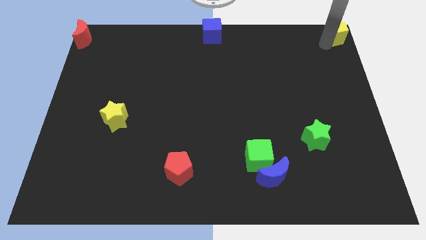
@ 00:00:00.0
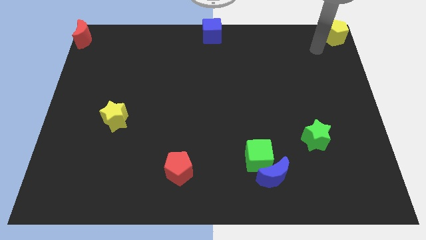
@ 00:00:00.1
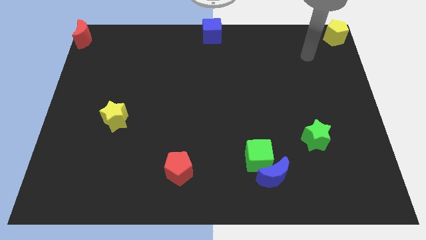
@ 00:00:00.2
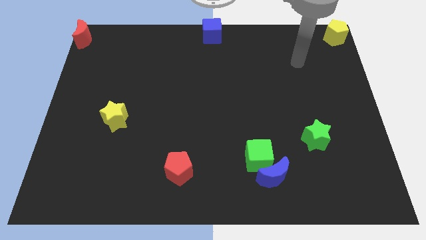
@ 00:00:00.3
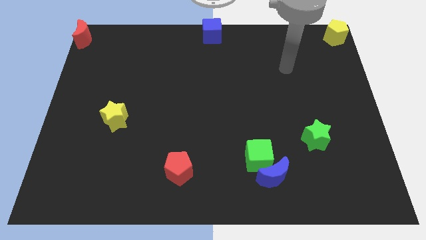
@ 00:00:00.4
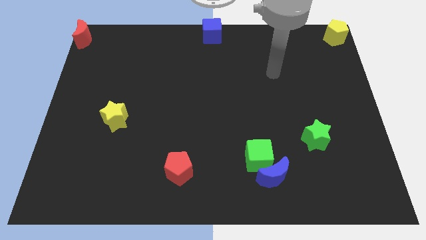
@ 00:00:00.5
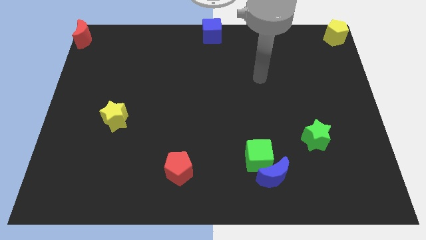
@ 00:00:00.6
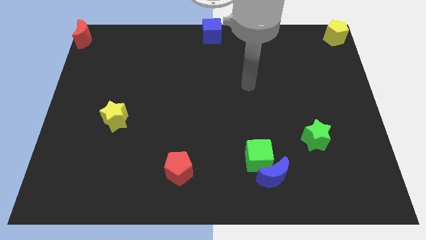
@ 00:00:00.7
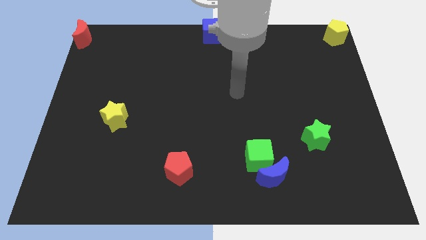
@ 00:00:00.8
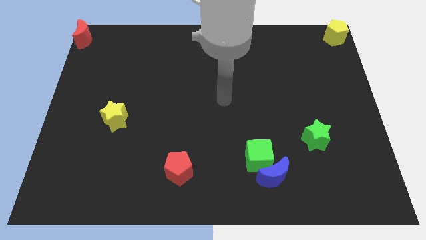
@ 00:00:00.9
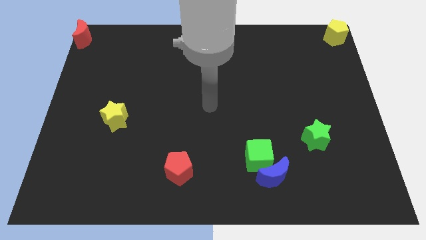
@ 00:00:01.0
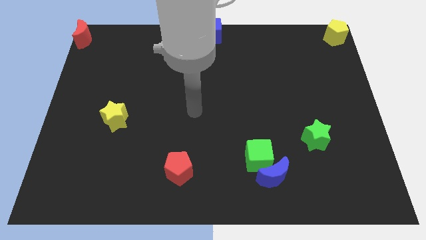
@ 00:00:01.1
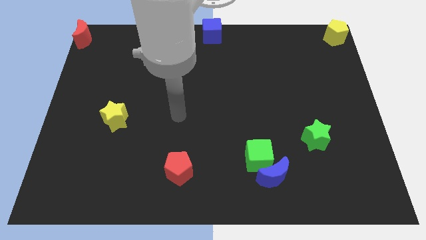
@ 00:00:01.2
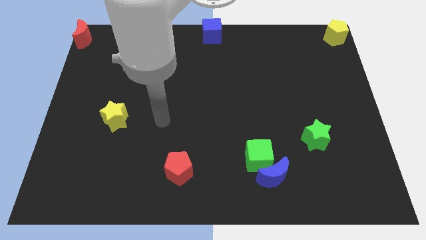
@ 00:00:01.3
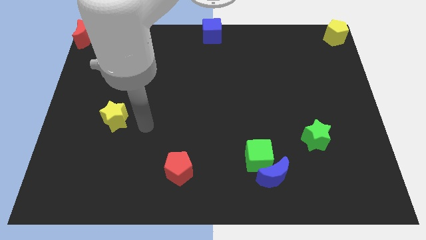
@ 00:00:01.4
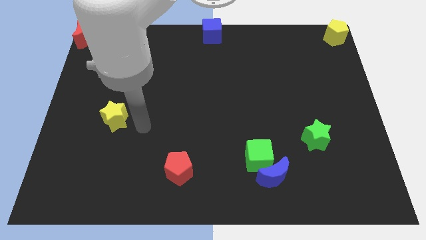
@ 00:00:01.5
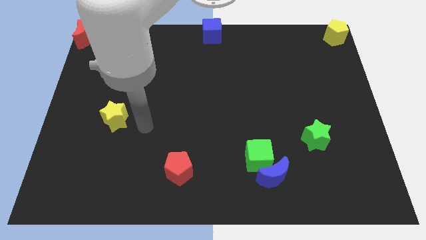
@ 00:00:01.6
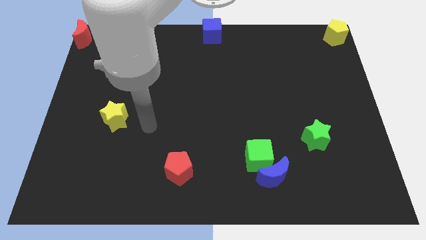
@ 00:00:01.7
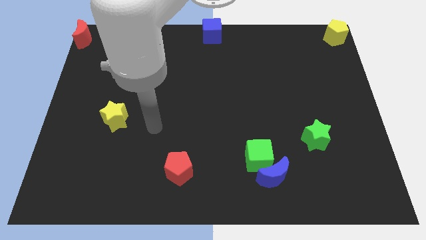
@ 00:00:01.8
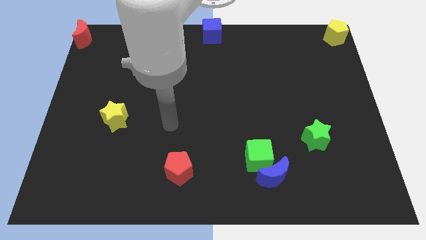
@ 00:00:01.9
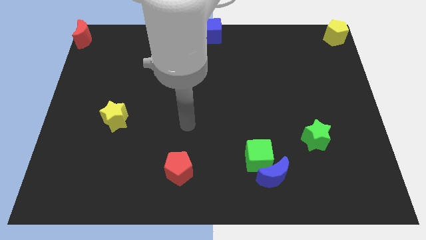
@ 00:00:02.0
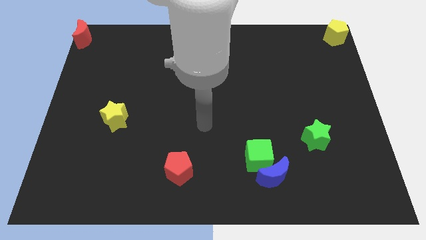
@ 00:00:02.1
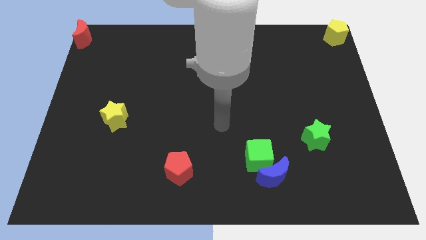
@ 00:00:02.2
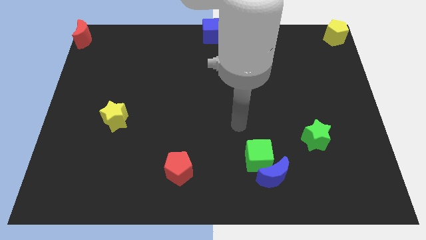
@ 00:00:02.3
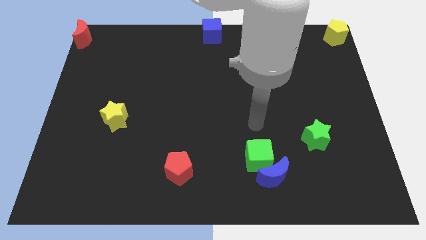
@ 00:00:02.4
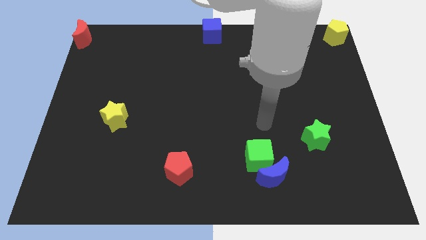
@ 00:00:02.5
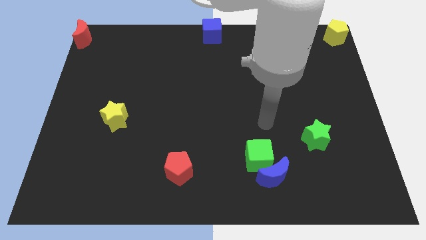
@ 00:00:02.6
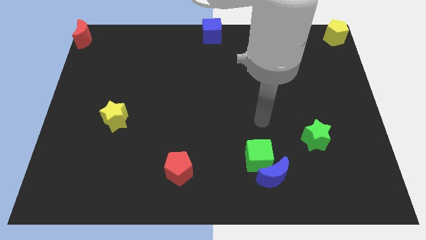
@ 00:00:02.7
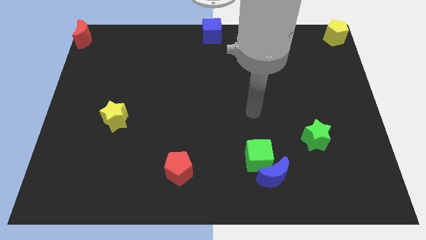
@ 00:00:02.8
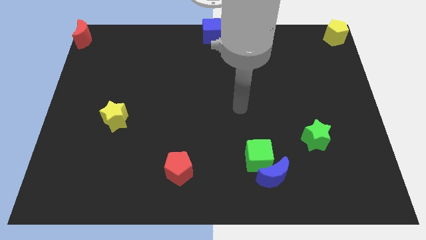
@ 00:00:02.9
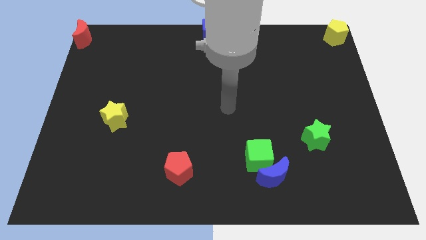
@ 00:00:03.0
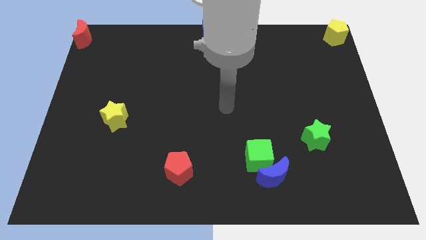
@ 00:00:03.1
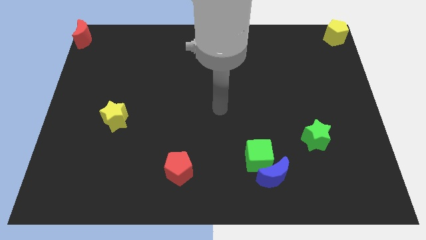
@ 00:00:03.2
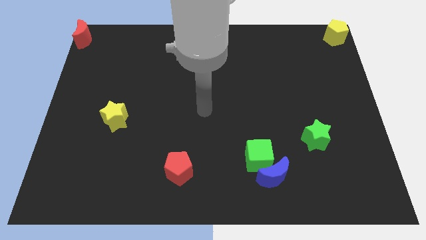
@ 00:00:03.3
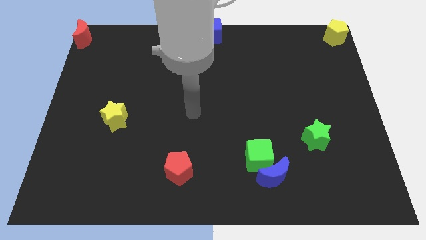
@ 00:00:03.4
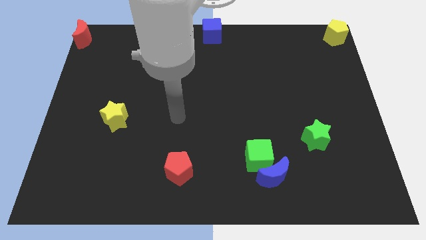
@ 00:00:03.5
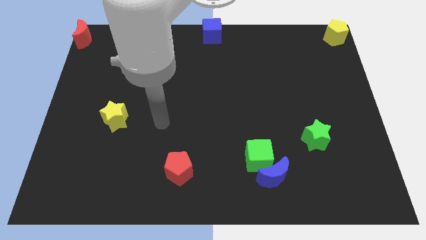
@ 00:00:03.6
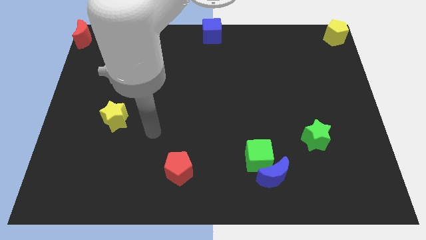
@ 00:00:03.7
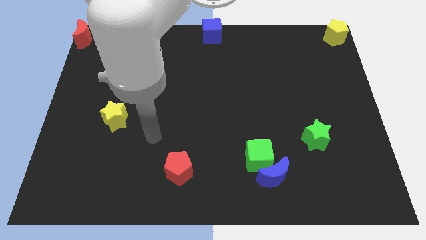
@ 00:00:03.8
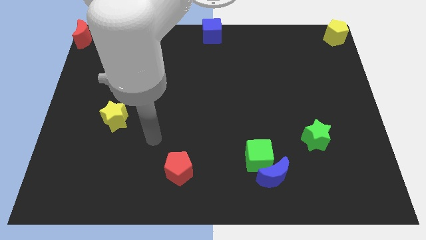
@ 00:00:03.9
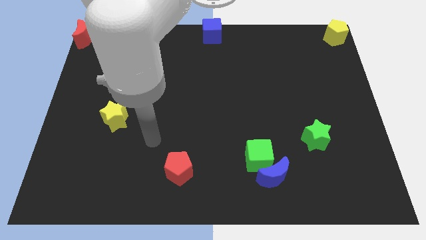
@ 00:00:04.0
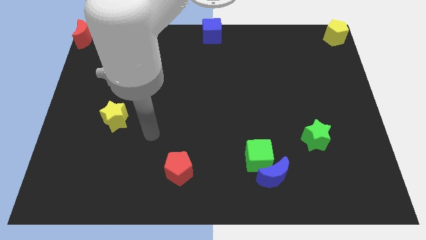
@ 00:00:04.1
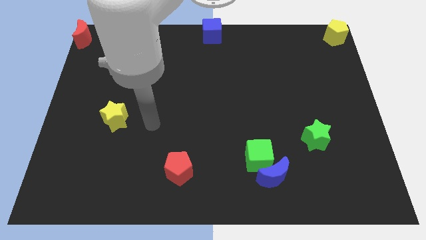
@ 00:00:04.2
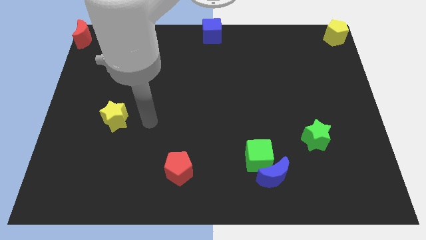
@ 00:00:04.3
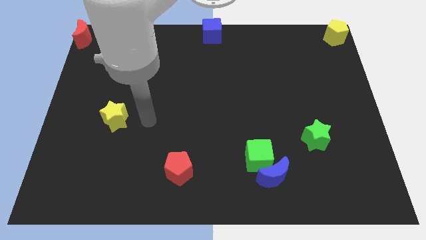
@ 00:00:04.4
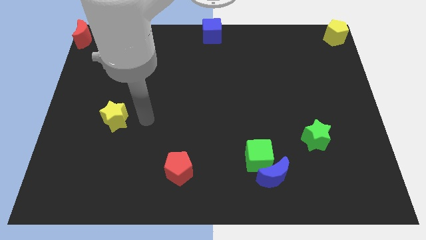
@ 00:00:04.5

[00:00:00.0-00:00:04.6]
move the arm away from the yellow pentagon

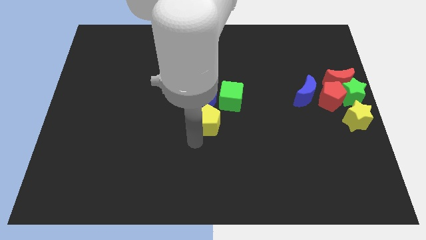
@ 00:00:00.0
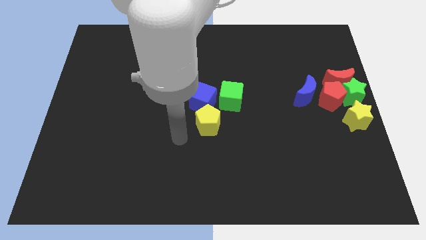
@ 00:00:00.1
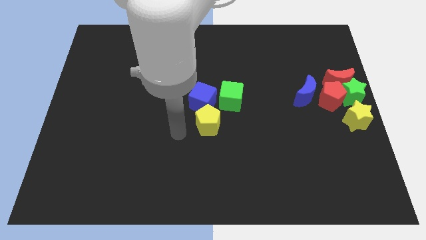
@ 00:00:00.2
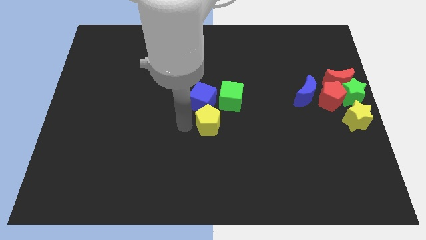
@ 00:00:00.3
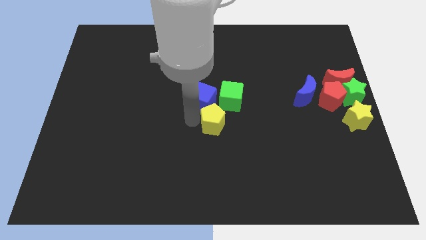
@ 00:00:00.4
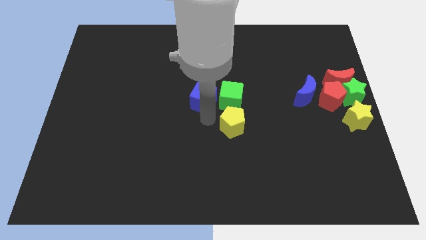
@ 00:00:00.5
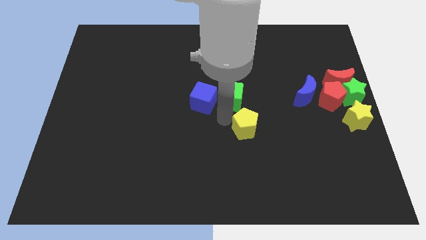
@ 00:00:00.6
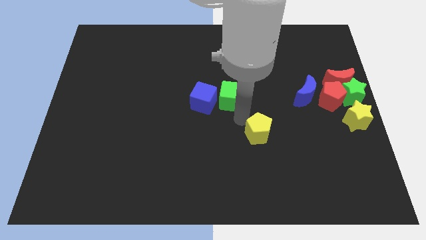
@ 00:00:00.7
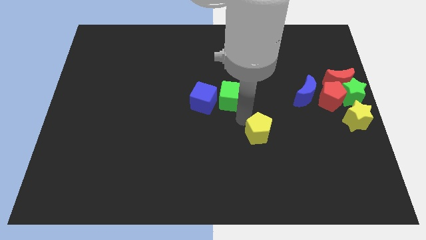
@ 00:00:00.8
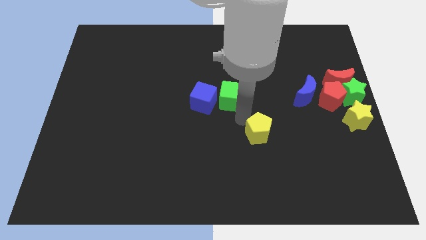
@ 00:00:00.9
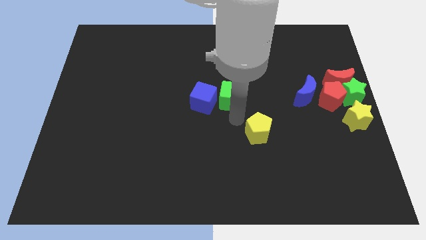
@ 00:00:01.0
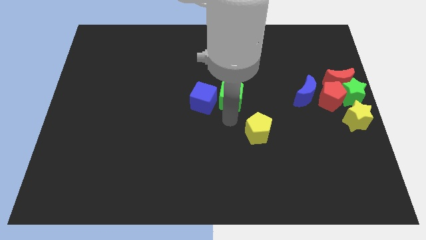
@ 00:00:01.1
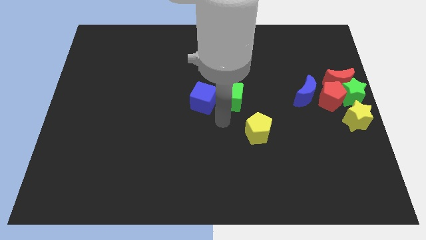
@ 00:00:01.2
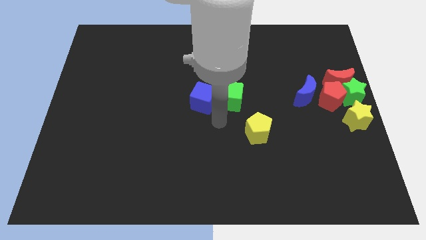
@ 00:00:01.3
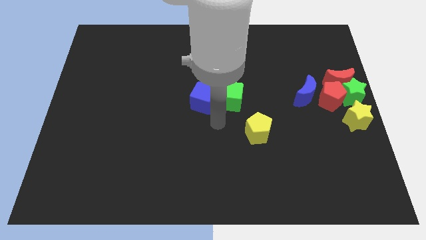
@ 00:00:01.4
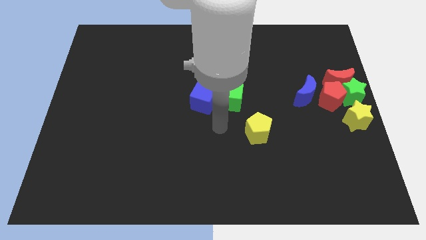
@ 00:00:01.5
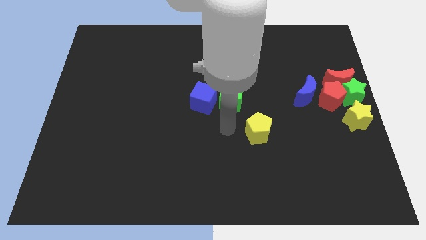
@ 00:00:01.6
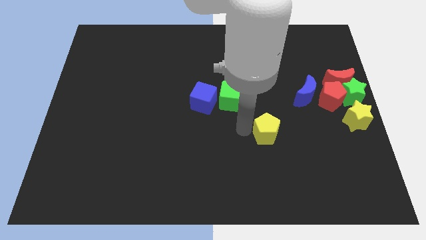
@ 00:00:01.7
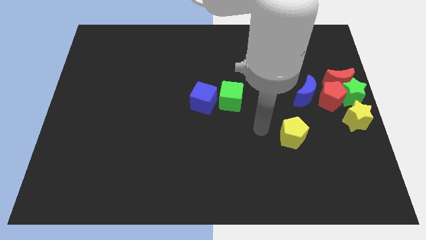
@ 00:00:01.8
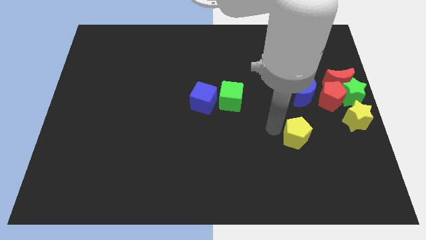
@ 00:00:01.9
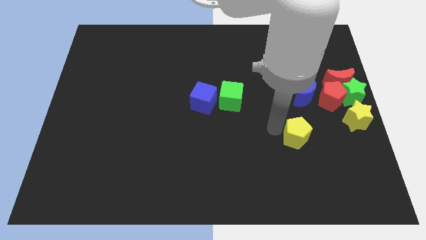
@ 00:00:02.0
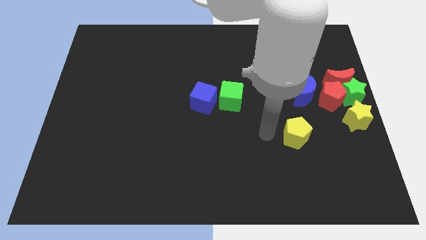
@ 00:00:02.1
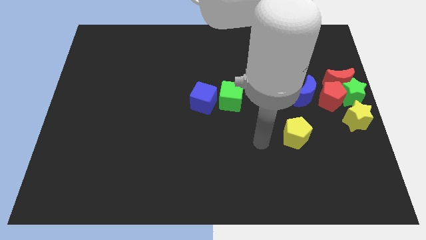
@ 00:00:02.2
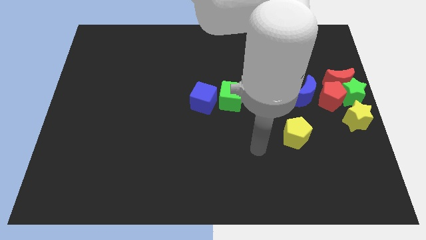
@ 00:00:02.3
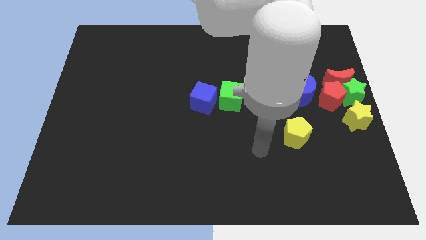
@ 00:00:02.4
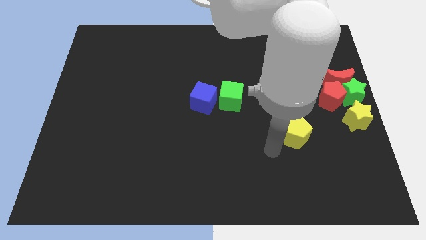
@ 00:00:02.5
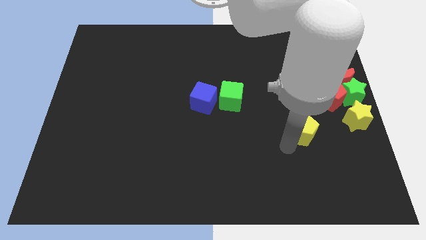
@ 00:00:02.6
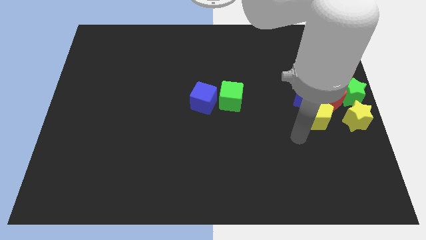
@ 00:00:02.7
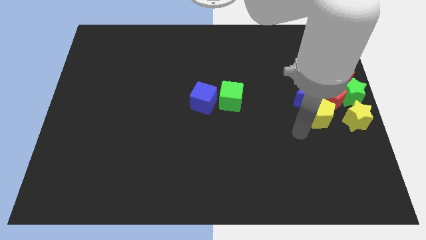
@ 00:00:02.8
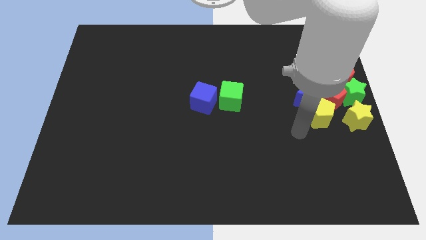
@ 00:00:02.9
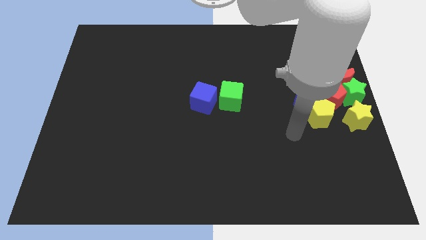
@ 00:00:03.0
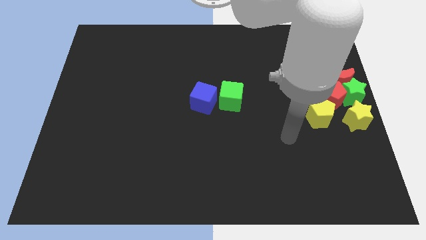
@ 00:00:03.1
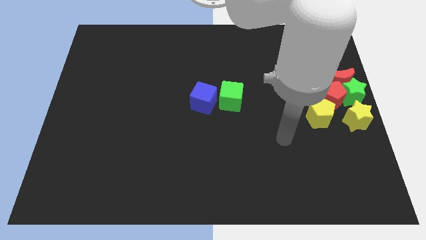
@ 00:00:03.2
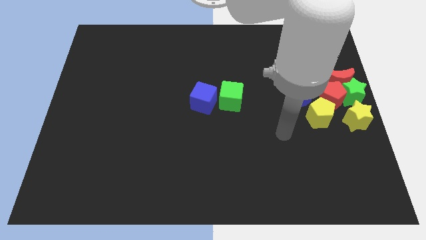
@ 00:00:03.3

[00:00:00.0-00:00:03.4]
place the yellow pentagon at the bottom left side of the red pentagon

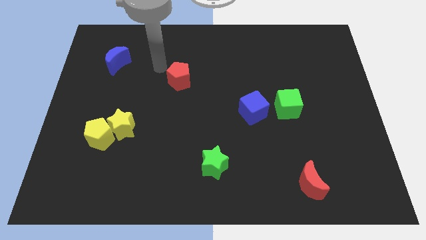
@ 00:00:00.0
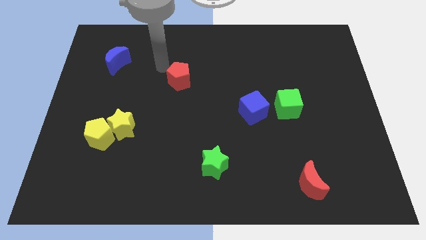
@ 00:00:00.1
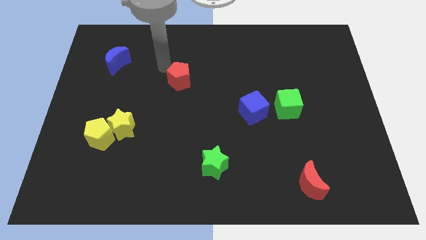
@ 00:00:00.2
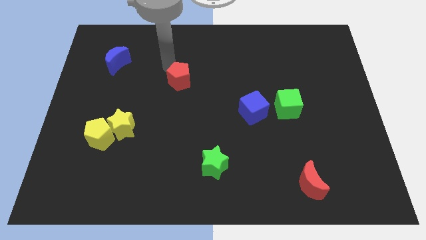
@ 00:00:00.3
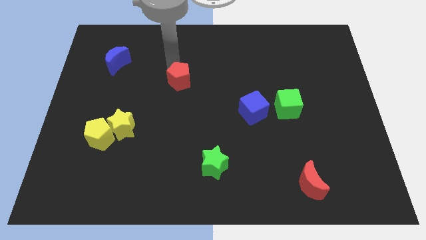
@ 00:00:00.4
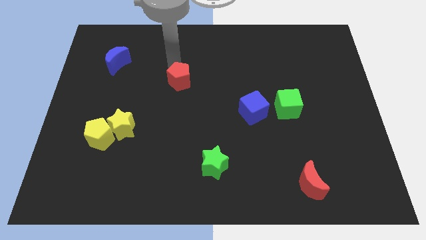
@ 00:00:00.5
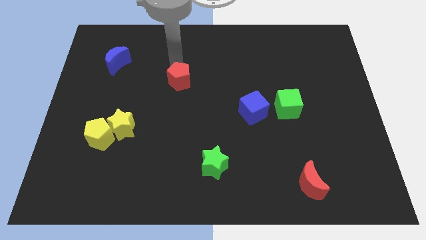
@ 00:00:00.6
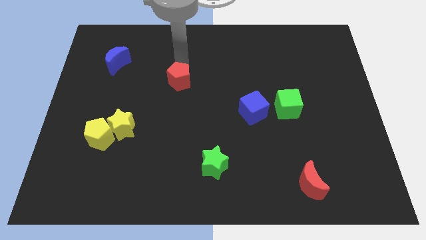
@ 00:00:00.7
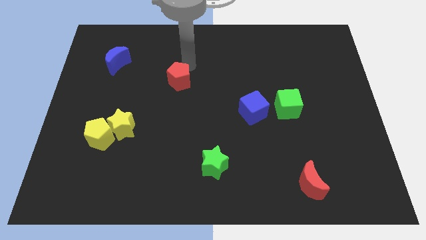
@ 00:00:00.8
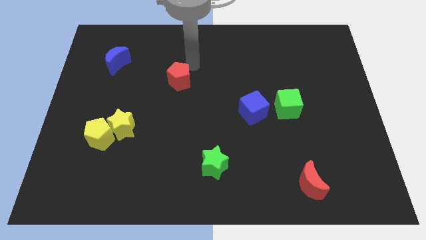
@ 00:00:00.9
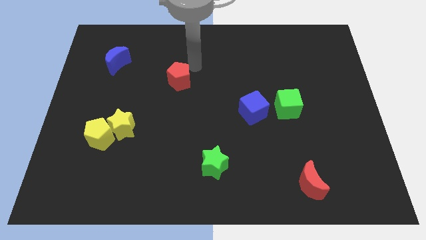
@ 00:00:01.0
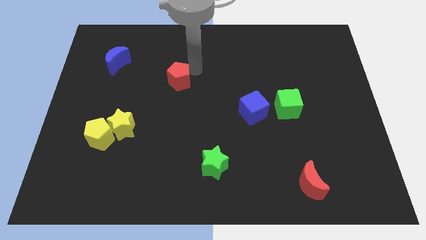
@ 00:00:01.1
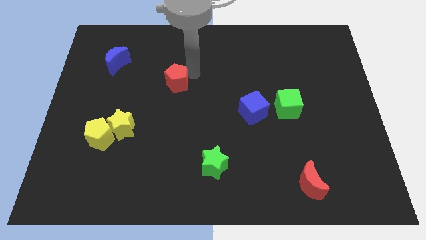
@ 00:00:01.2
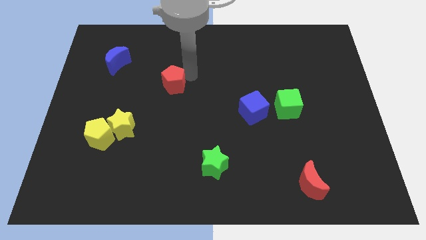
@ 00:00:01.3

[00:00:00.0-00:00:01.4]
touch the red pentagon
